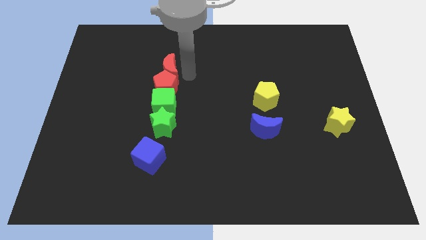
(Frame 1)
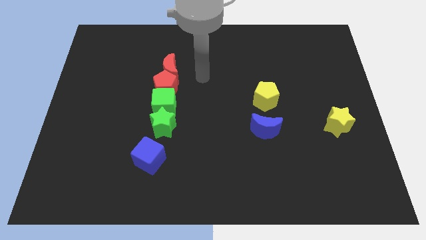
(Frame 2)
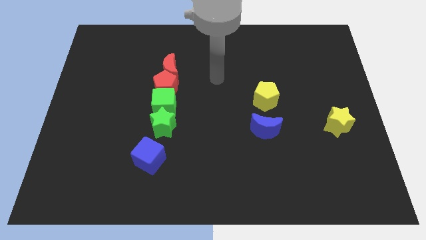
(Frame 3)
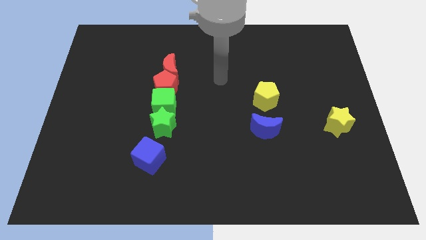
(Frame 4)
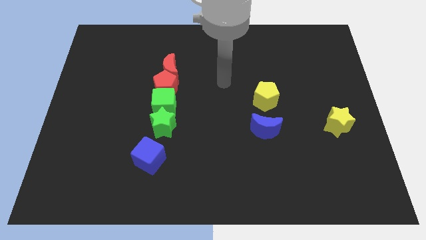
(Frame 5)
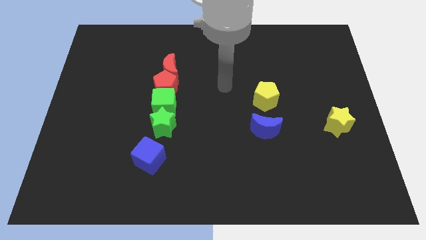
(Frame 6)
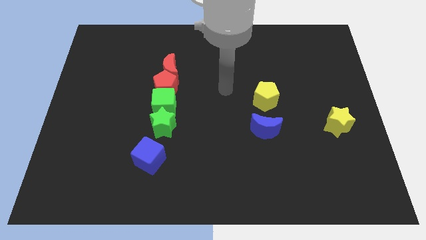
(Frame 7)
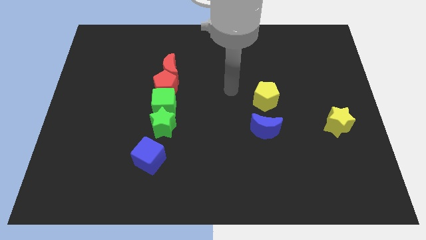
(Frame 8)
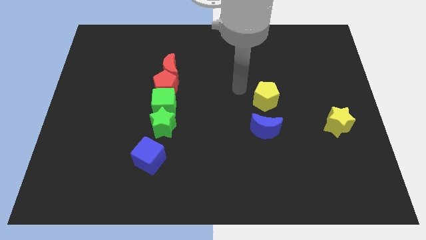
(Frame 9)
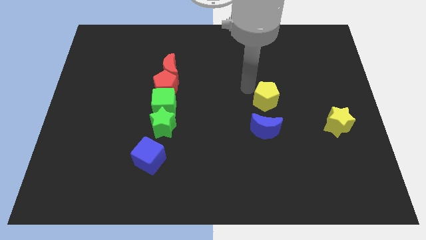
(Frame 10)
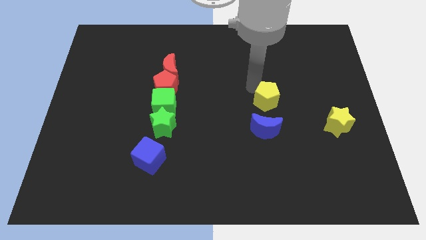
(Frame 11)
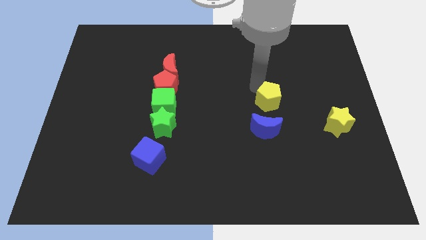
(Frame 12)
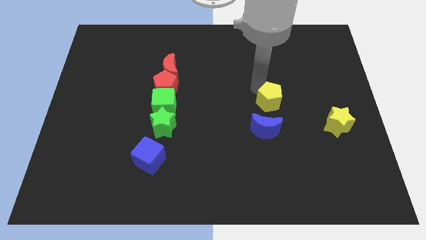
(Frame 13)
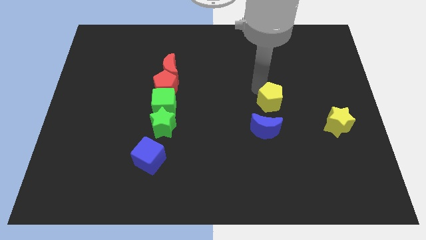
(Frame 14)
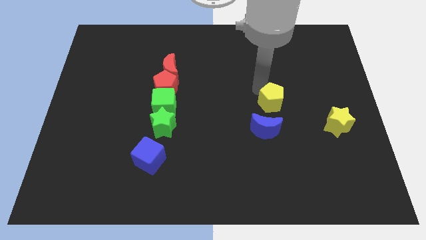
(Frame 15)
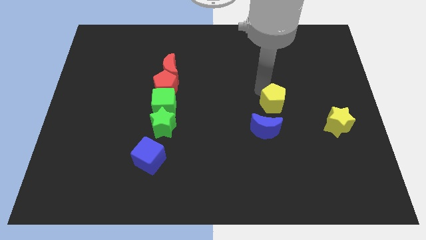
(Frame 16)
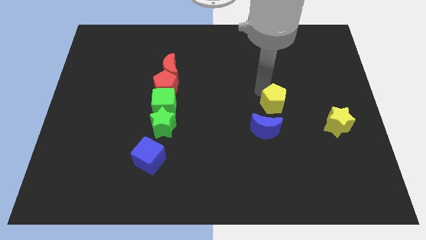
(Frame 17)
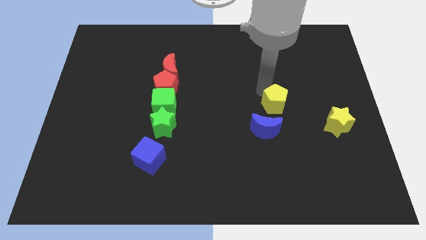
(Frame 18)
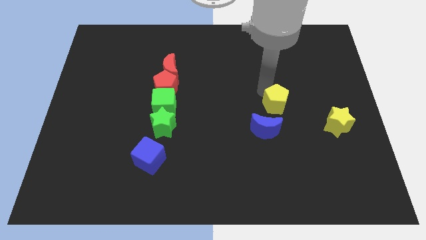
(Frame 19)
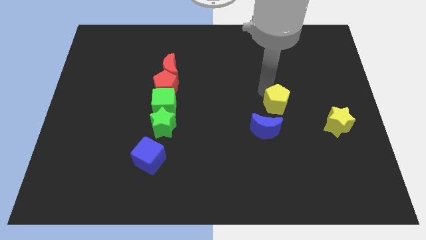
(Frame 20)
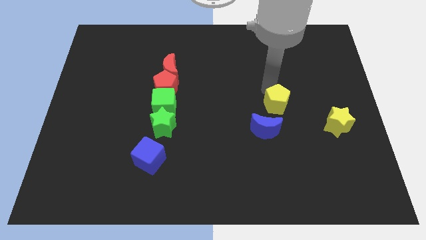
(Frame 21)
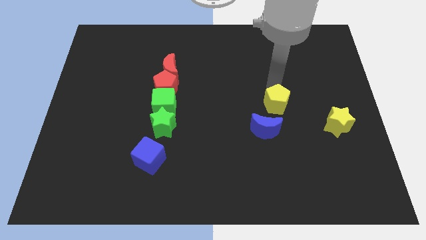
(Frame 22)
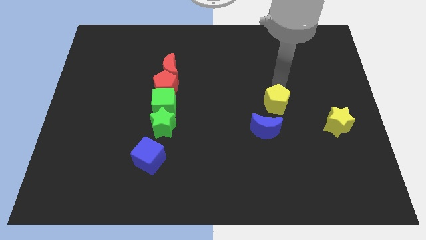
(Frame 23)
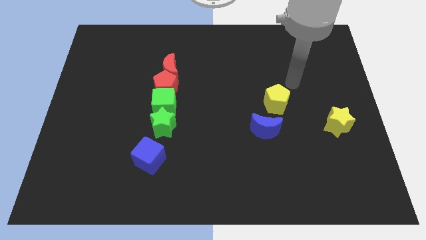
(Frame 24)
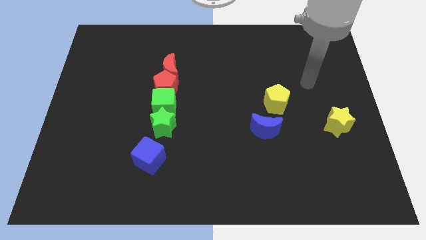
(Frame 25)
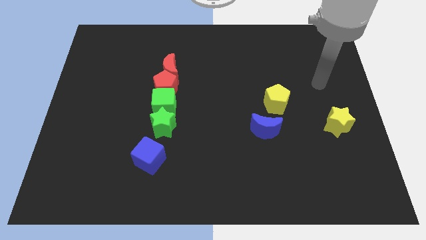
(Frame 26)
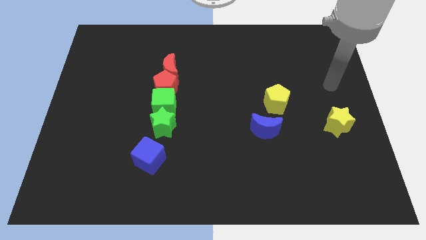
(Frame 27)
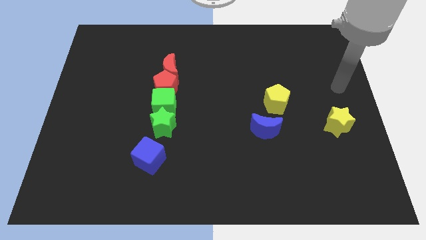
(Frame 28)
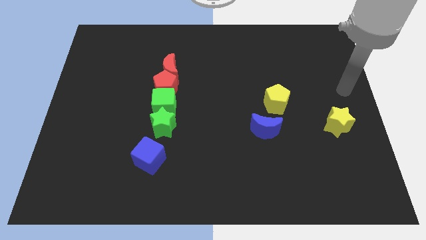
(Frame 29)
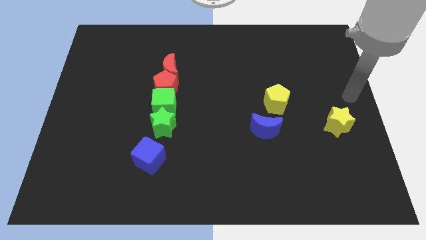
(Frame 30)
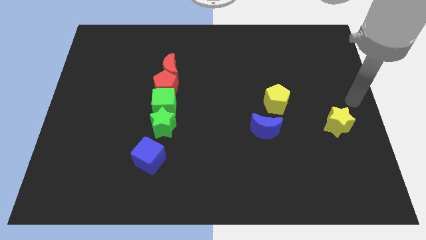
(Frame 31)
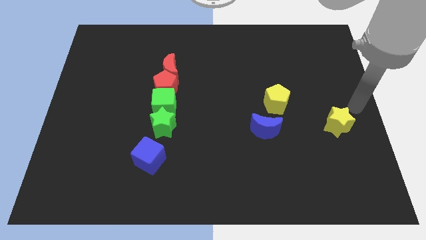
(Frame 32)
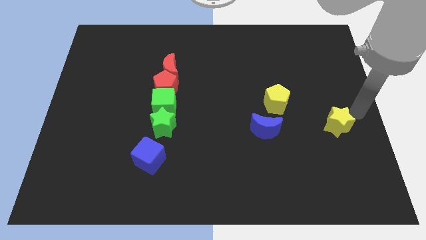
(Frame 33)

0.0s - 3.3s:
slightly push the yellow pentagon above the blue crescent

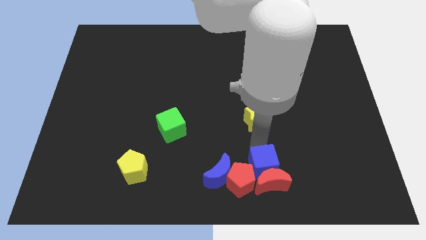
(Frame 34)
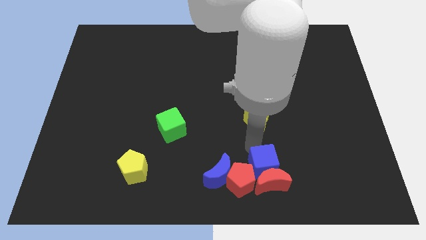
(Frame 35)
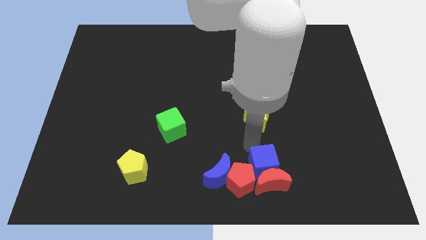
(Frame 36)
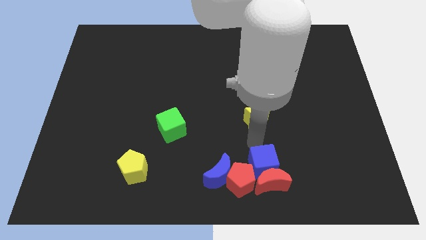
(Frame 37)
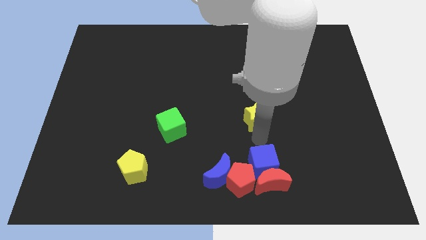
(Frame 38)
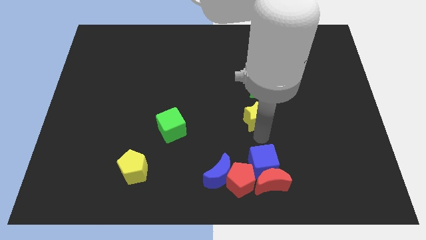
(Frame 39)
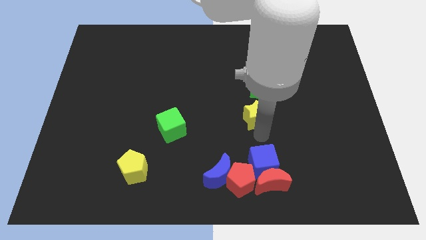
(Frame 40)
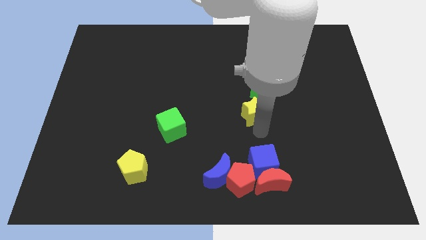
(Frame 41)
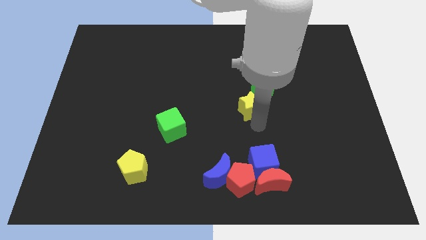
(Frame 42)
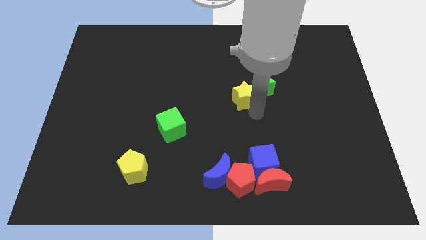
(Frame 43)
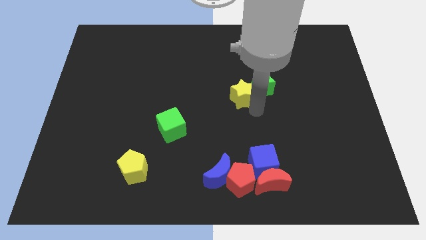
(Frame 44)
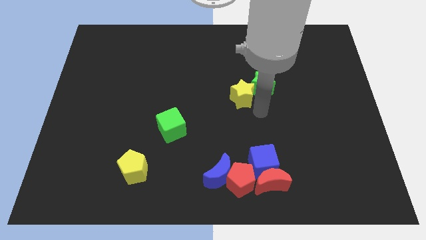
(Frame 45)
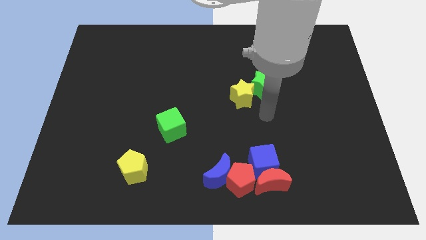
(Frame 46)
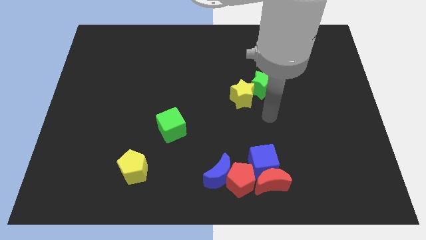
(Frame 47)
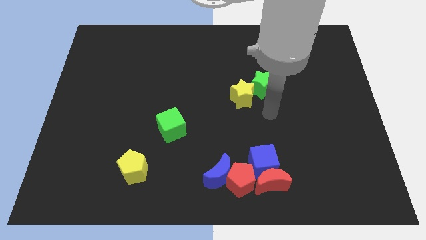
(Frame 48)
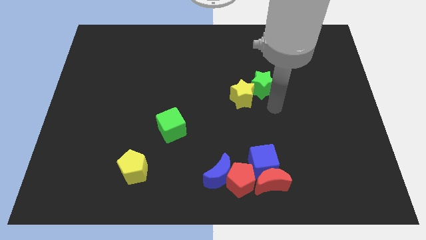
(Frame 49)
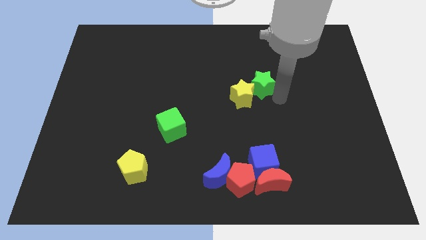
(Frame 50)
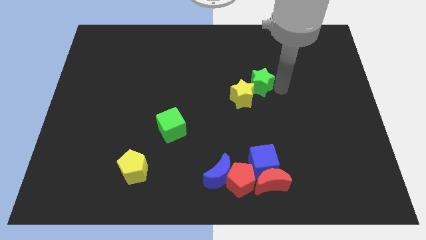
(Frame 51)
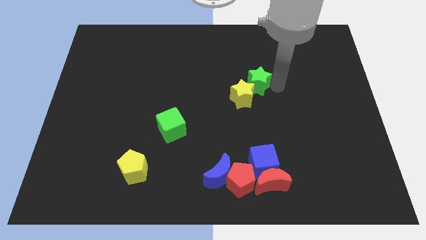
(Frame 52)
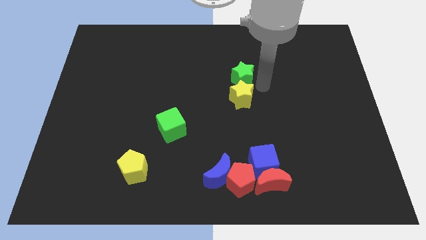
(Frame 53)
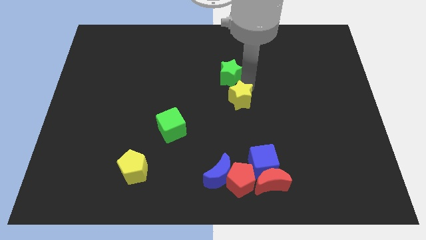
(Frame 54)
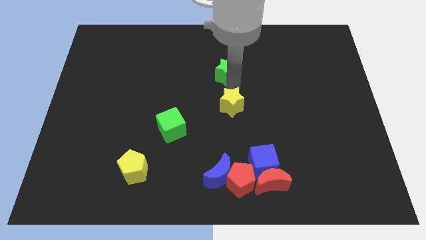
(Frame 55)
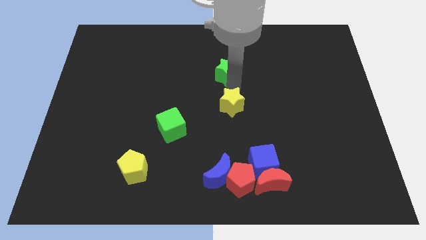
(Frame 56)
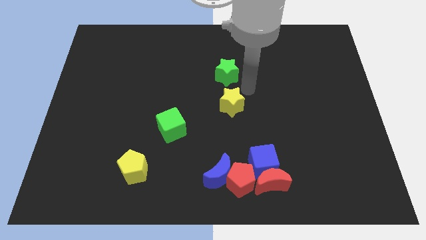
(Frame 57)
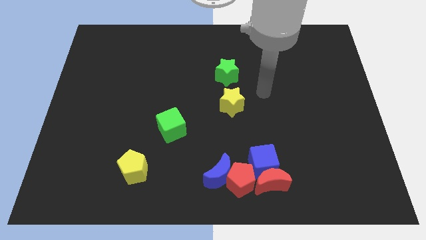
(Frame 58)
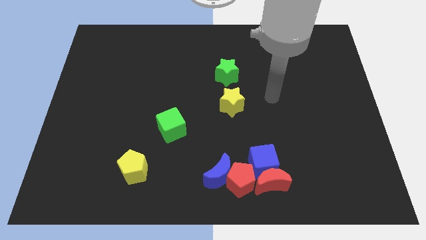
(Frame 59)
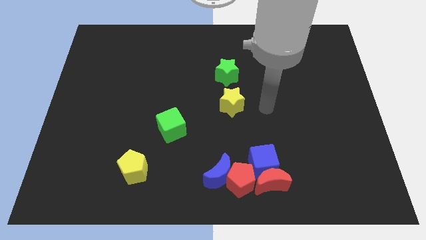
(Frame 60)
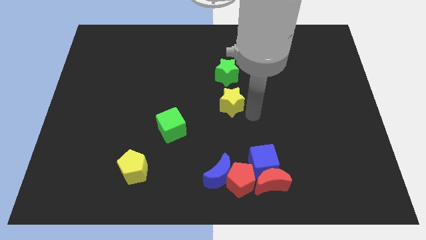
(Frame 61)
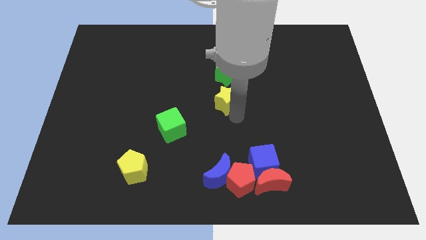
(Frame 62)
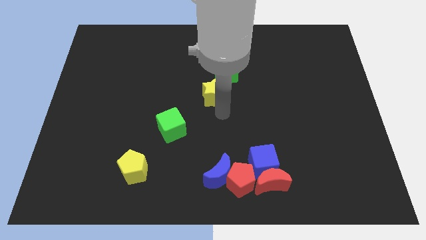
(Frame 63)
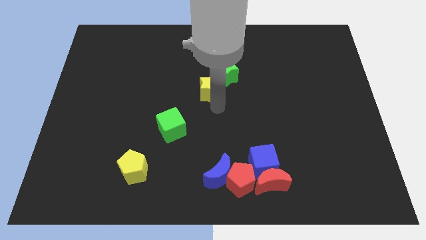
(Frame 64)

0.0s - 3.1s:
push the yellow star into the green star

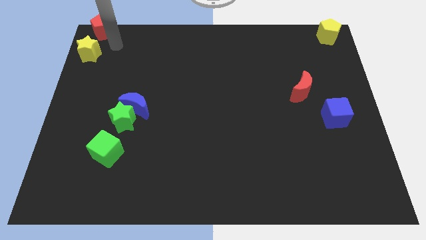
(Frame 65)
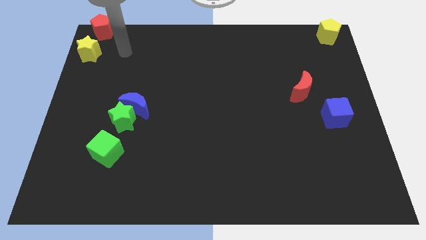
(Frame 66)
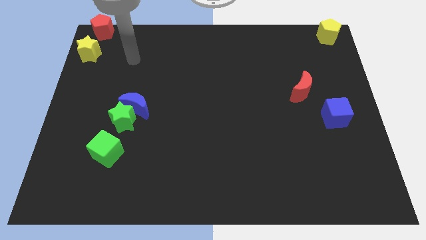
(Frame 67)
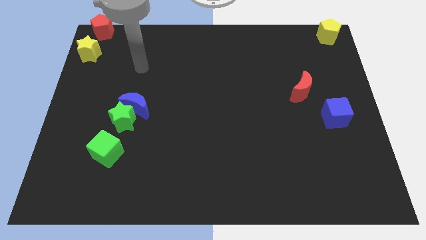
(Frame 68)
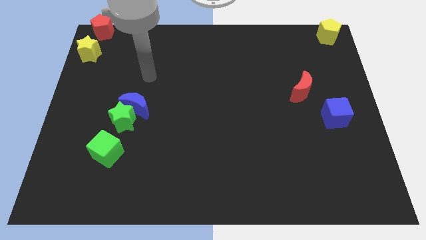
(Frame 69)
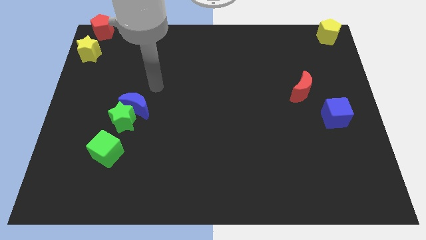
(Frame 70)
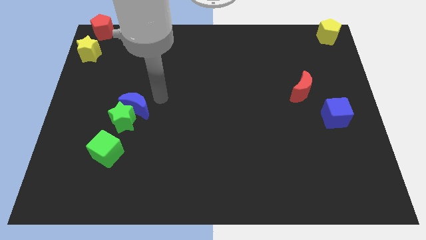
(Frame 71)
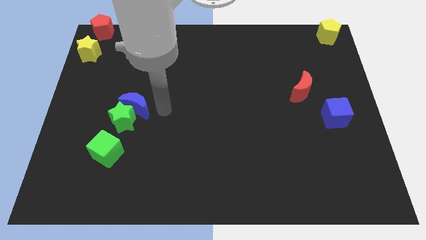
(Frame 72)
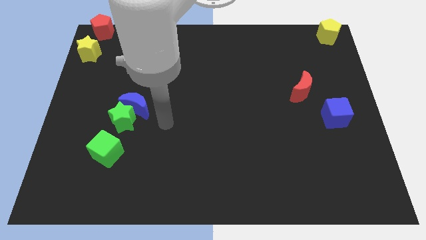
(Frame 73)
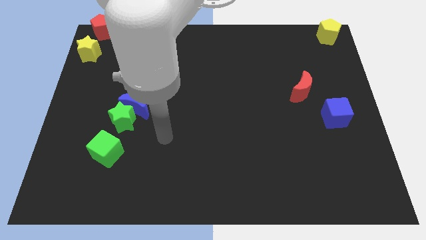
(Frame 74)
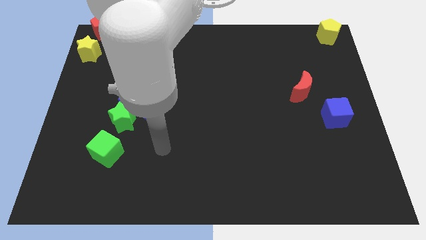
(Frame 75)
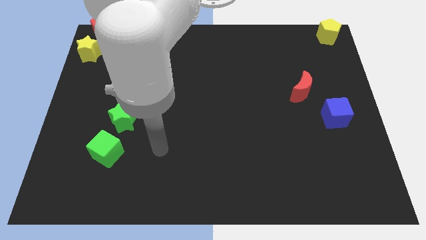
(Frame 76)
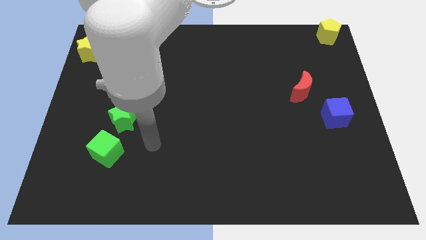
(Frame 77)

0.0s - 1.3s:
move the arm away from the red pentagon

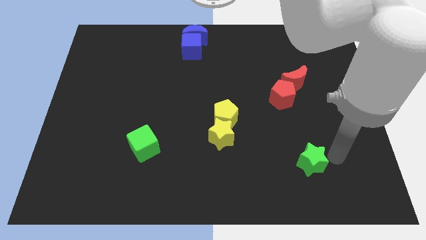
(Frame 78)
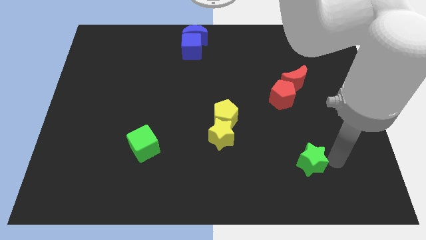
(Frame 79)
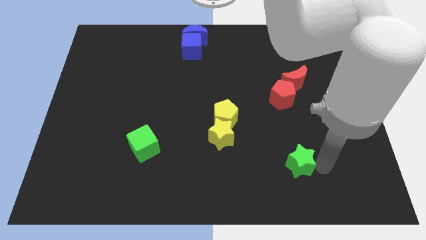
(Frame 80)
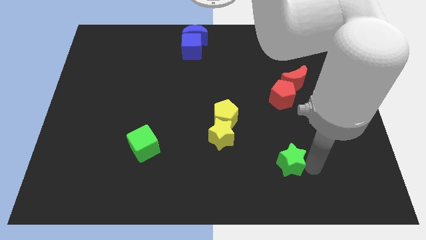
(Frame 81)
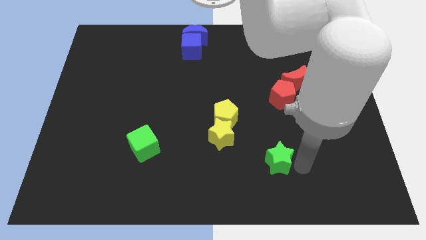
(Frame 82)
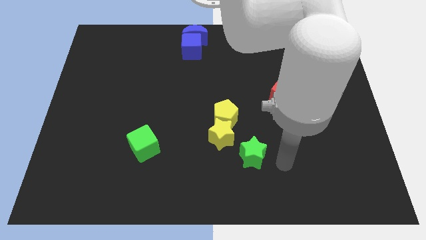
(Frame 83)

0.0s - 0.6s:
put the green star parallel to green cube

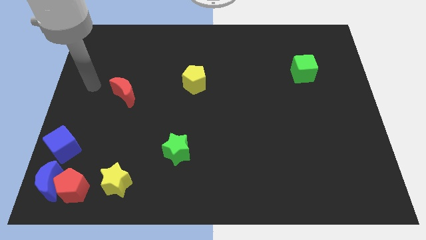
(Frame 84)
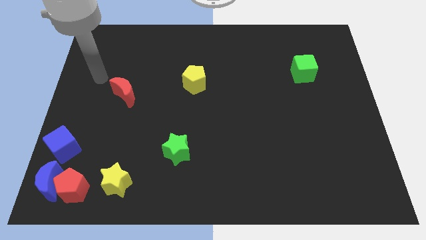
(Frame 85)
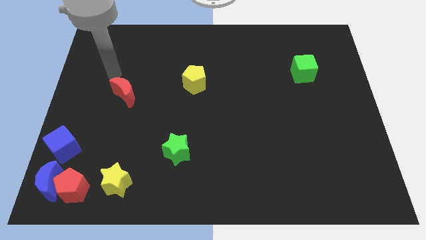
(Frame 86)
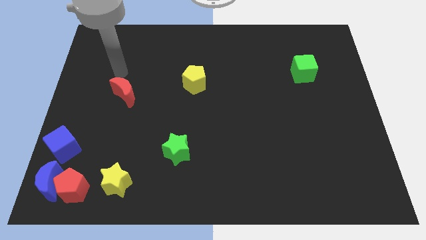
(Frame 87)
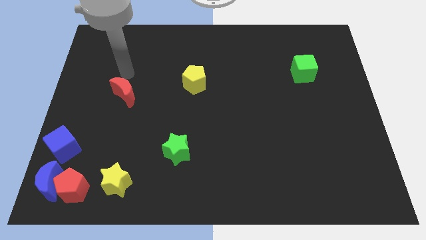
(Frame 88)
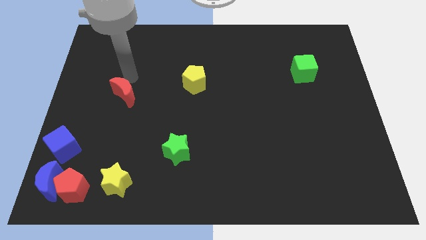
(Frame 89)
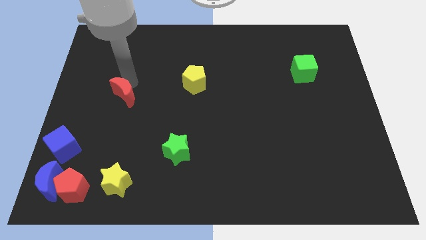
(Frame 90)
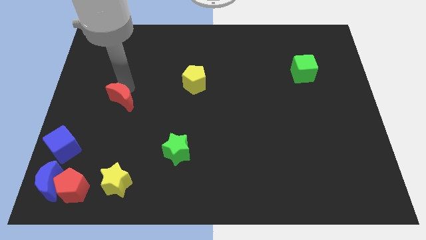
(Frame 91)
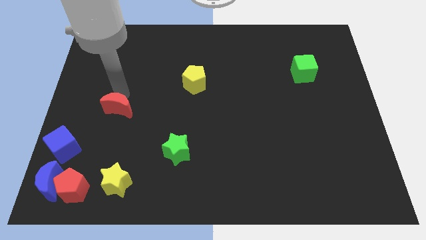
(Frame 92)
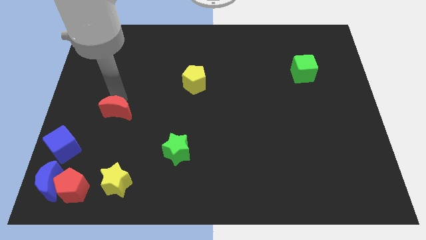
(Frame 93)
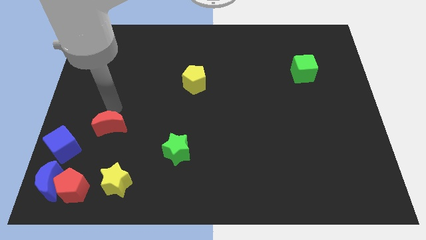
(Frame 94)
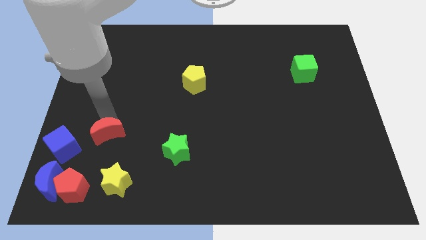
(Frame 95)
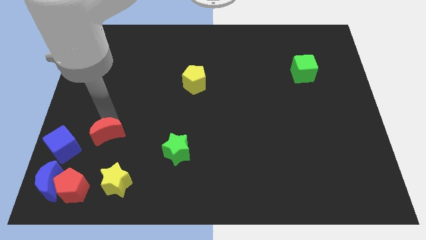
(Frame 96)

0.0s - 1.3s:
push the red crescent to the right of the blue cube
